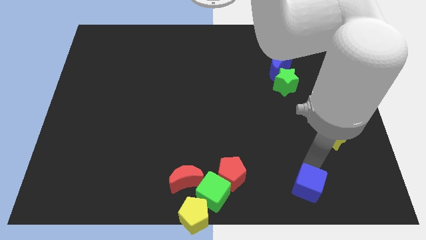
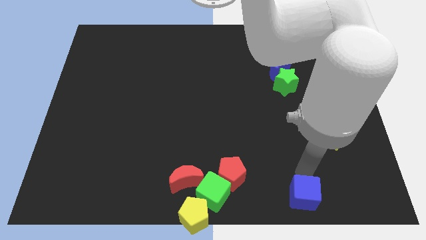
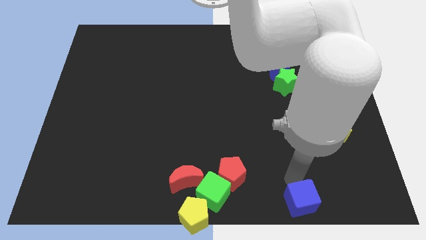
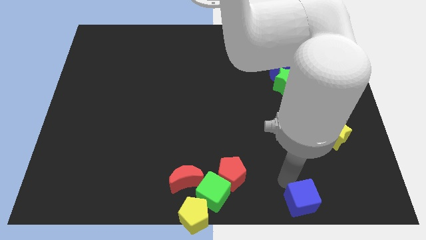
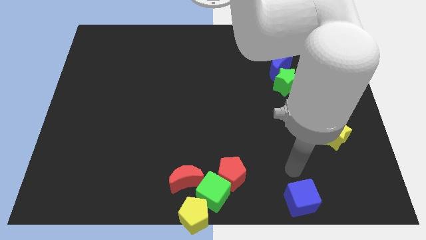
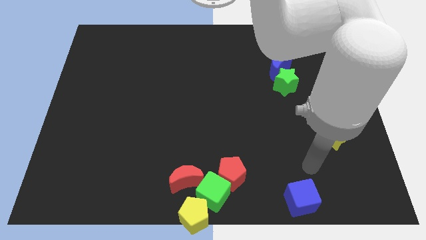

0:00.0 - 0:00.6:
slightly move the blue cube towards down

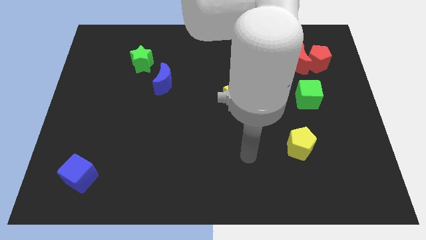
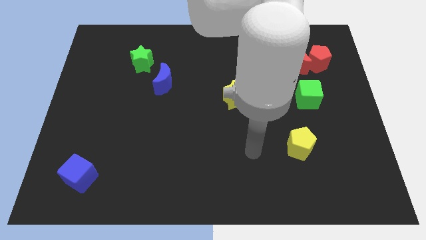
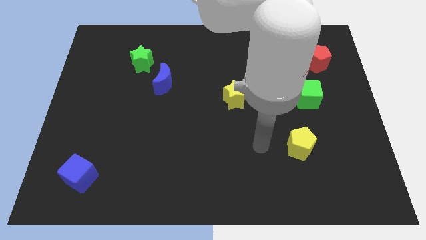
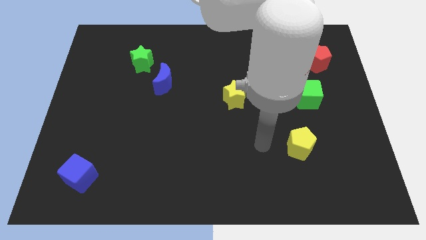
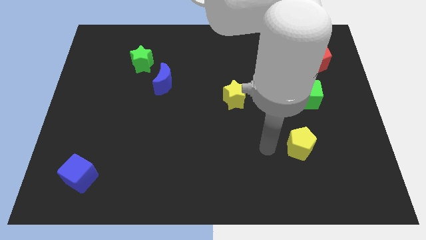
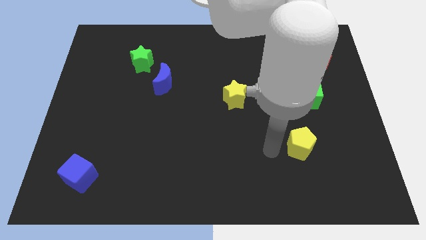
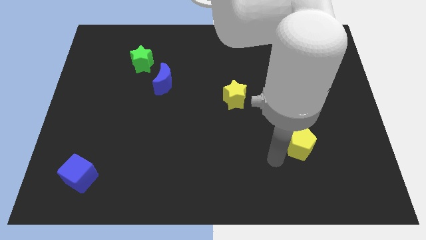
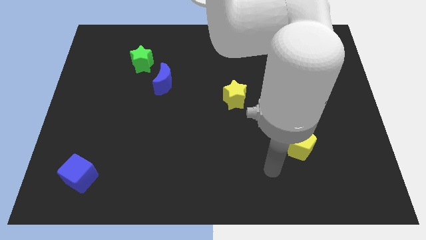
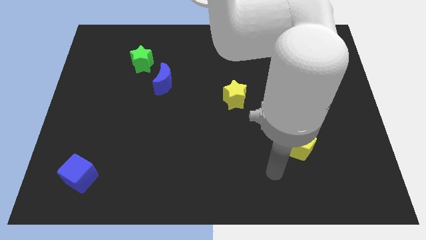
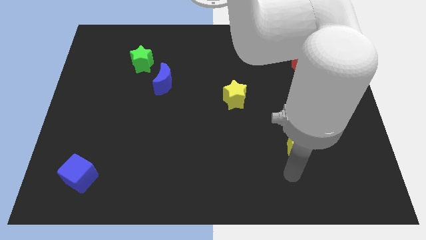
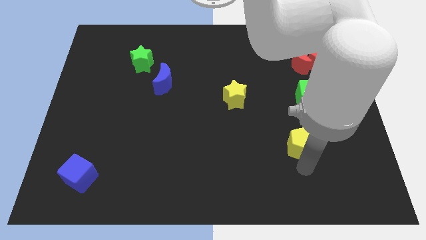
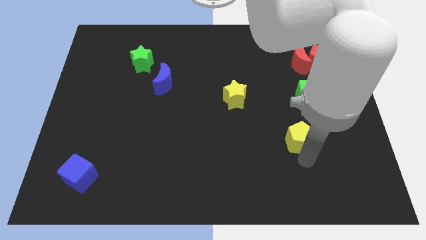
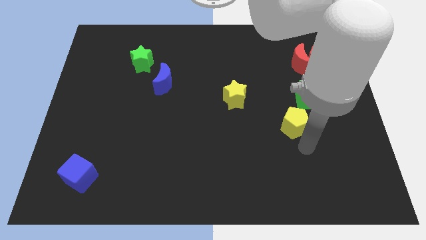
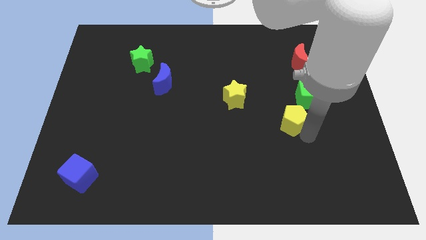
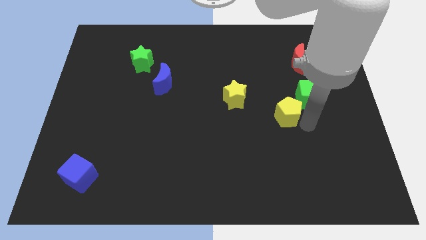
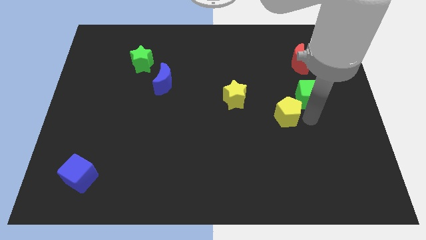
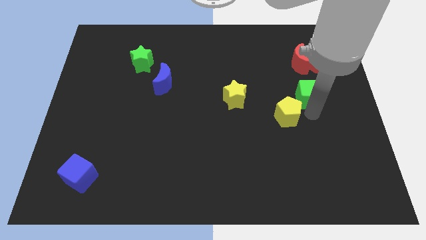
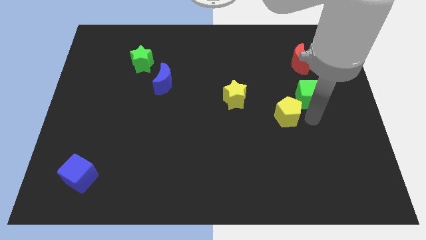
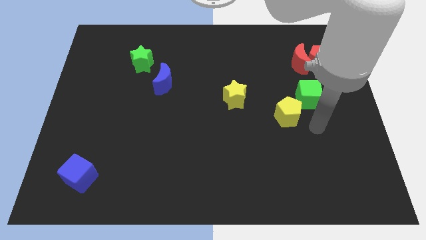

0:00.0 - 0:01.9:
push the yellow pentagon diagonal to the bottom left of the green cube

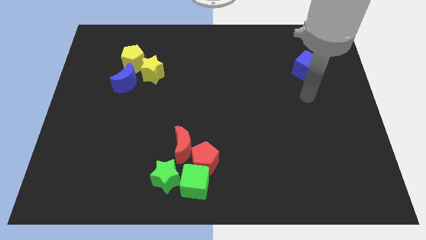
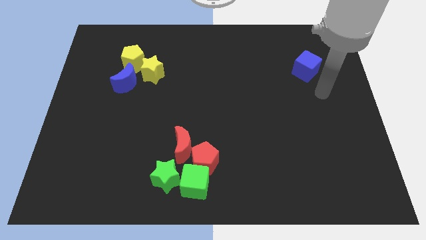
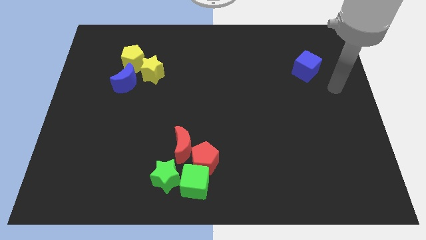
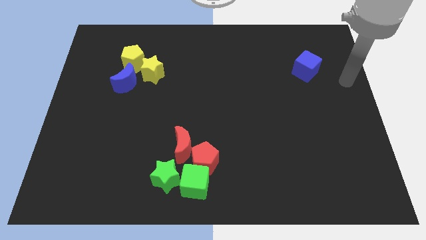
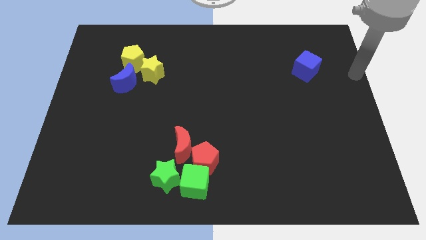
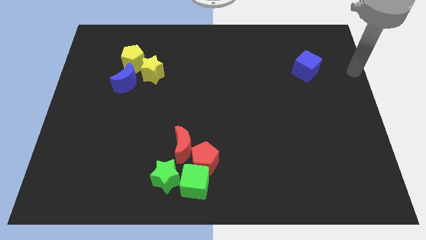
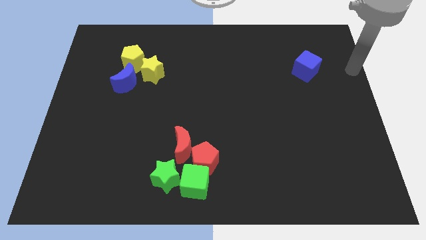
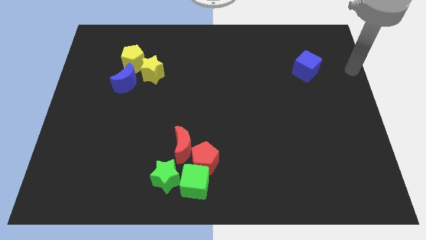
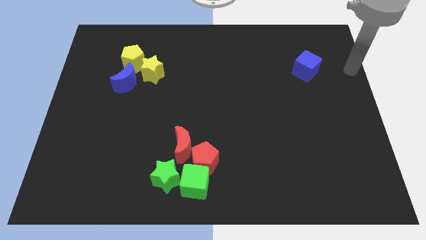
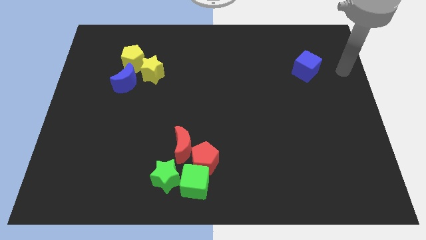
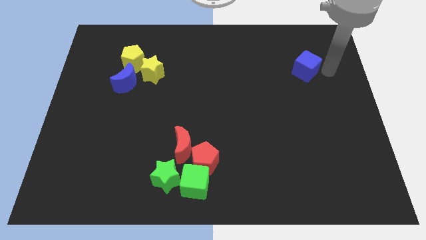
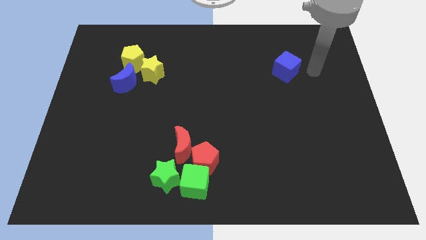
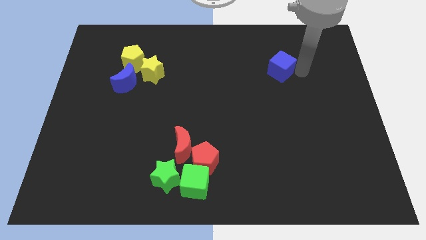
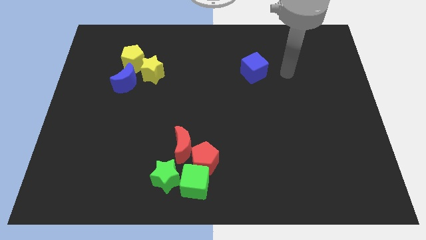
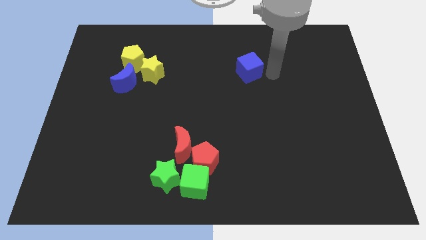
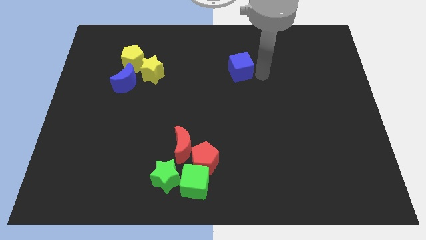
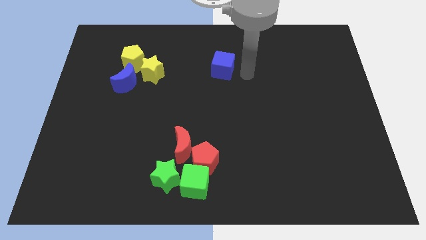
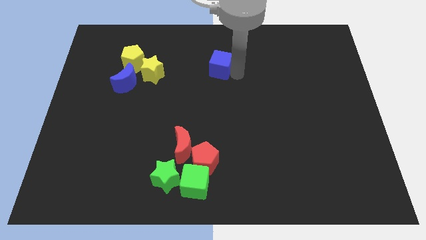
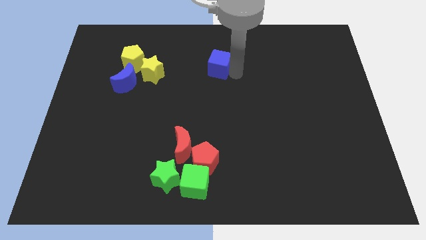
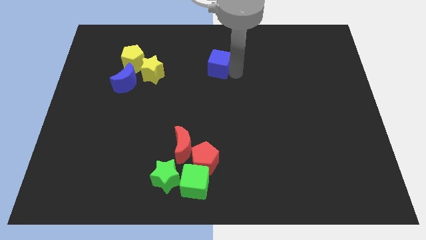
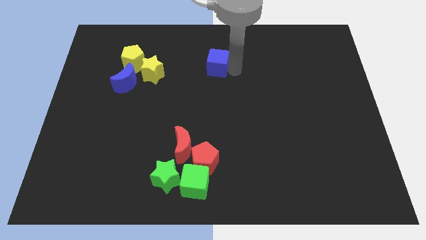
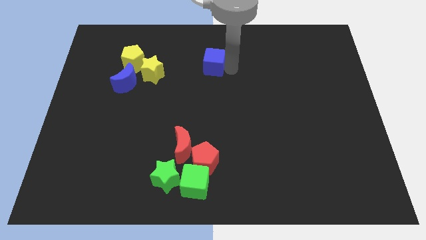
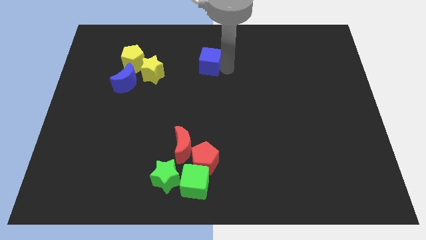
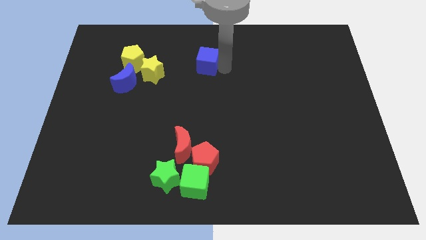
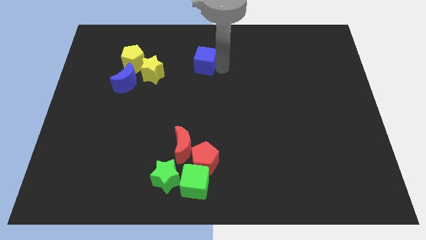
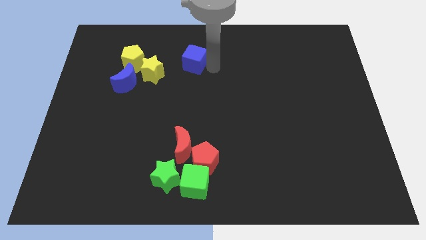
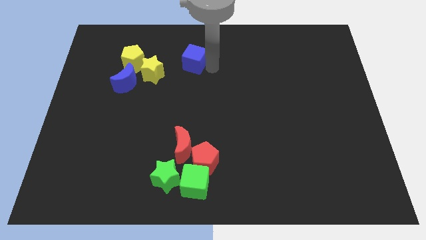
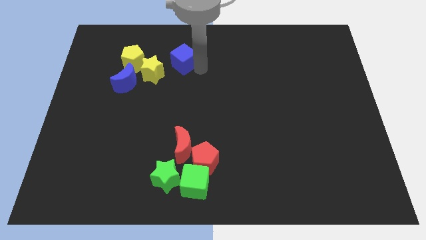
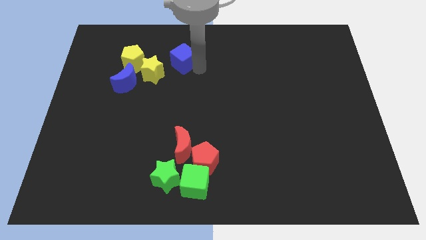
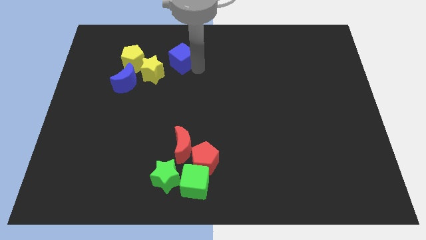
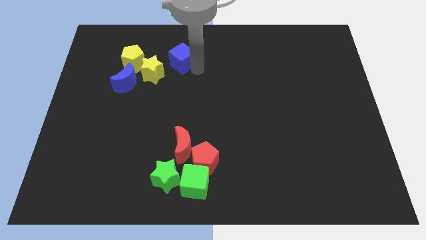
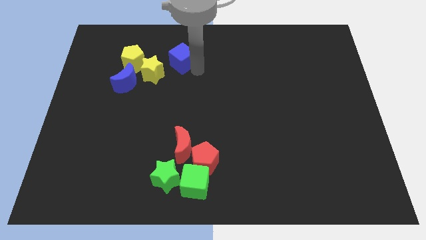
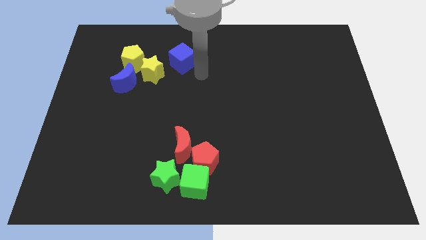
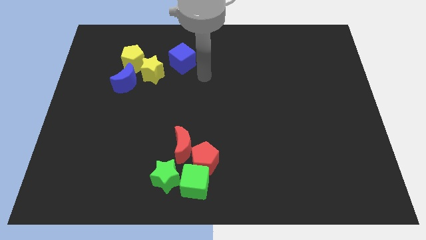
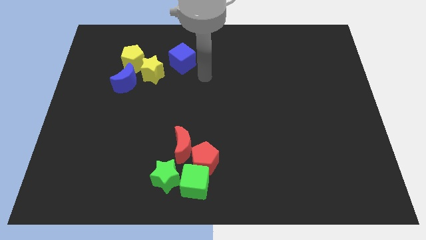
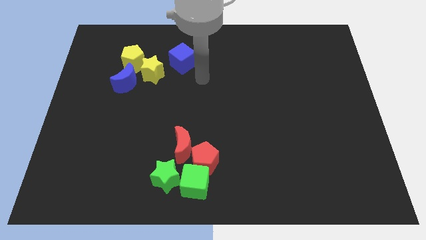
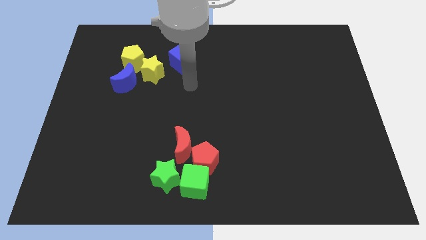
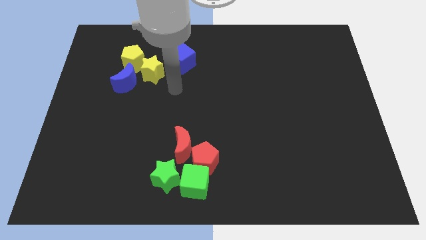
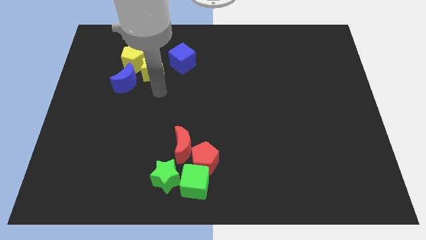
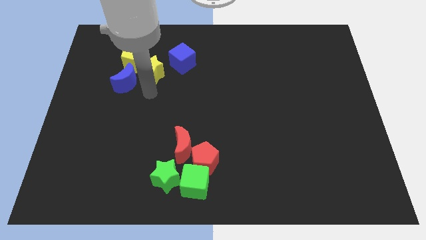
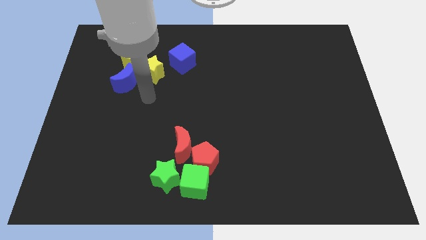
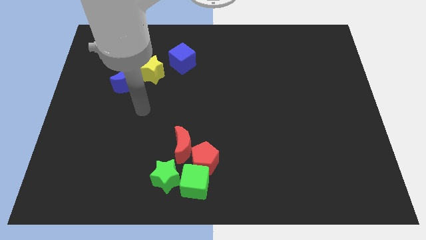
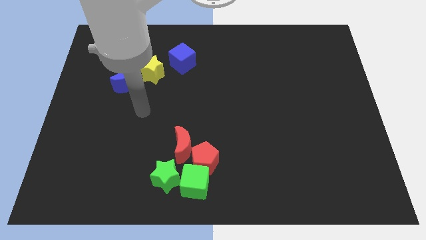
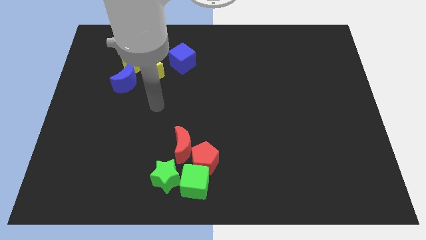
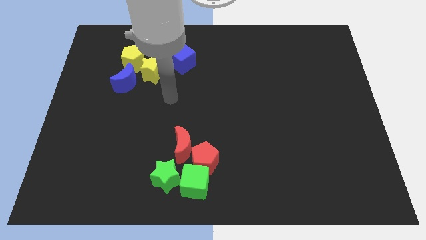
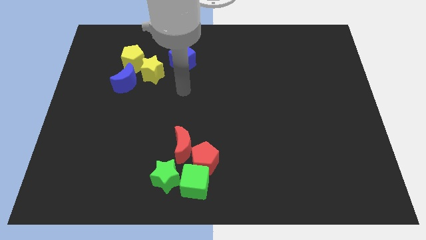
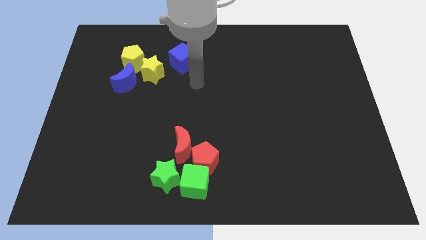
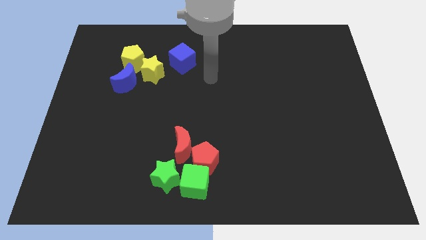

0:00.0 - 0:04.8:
slide blue cube close to yellow star

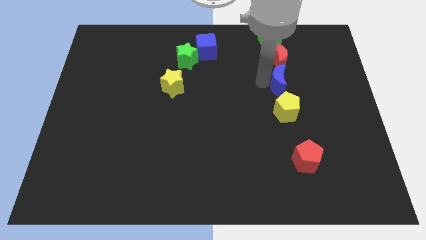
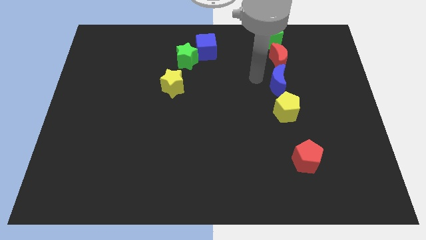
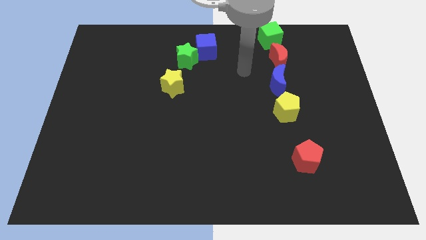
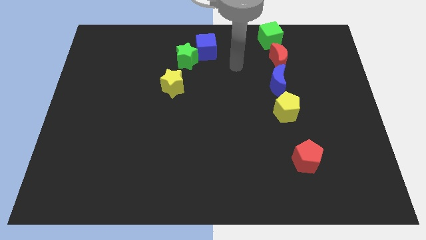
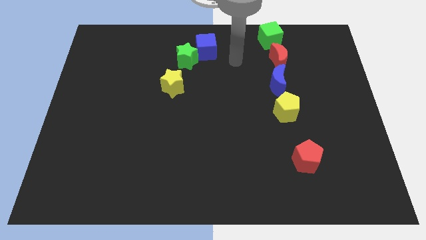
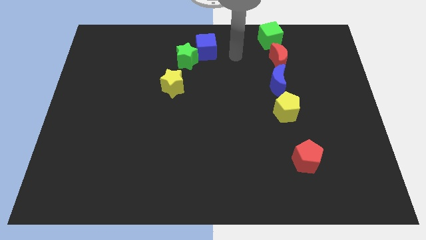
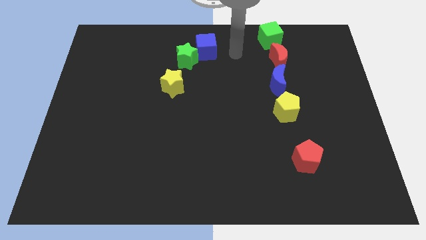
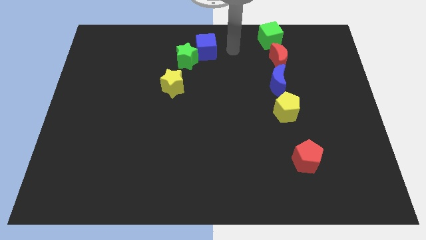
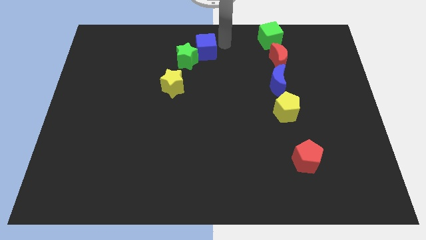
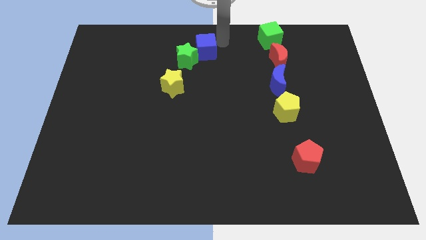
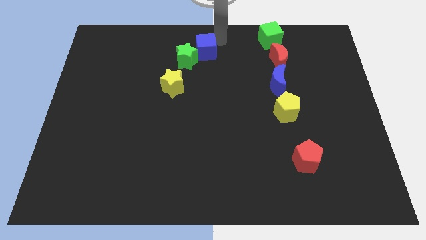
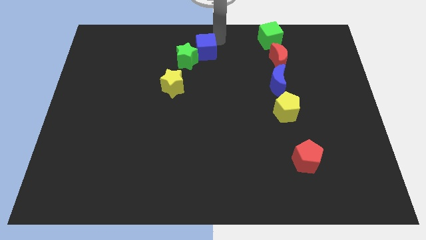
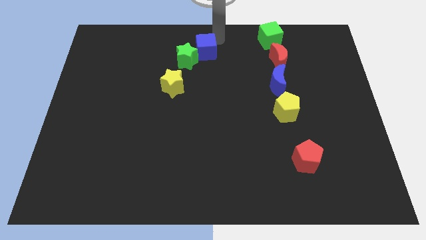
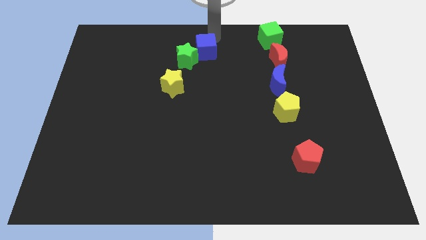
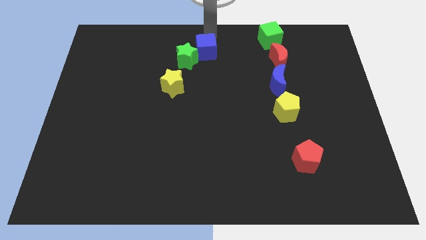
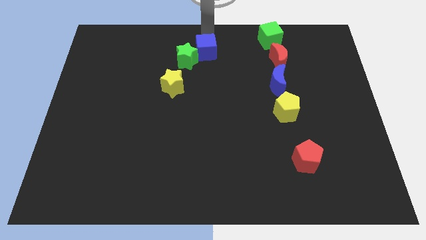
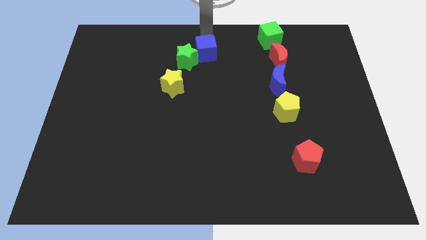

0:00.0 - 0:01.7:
go and touch the top side of the blue cube
